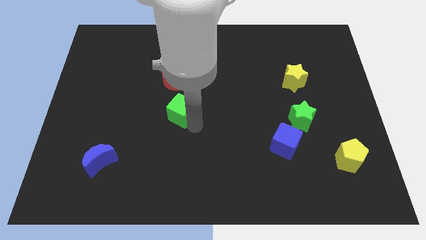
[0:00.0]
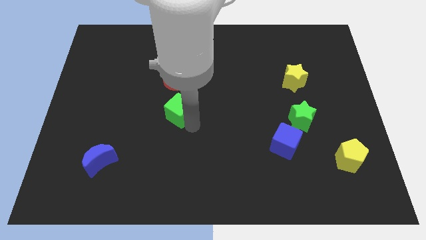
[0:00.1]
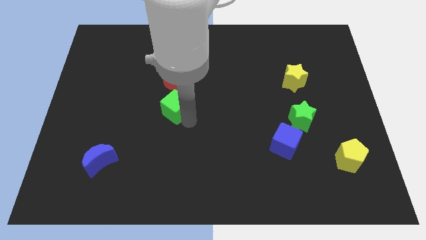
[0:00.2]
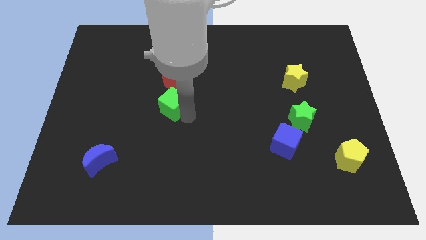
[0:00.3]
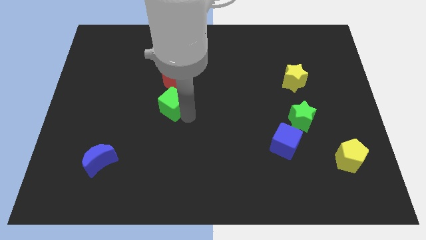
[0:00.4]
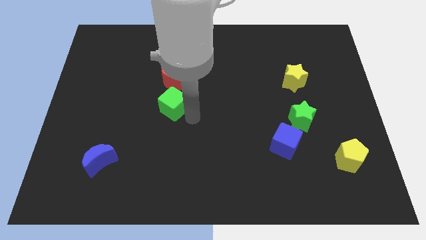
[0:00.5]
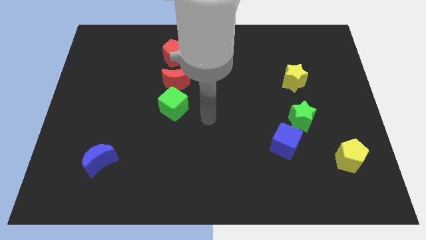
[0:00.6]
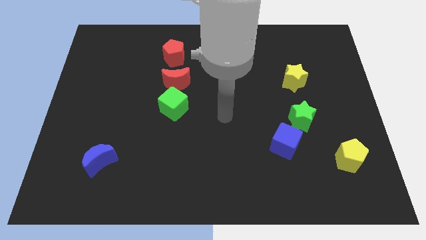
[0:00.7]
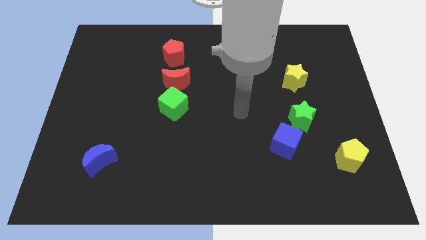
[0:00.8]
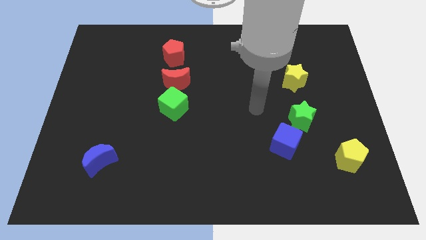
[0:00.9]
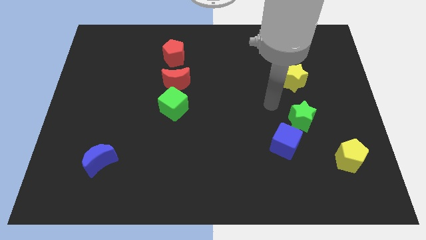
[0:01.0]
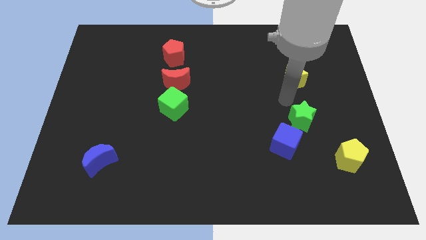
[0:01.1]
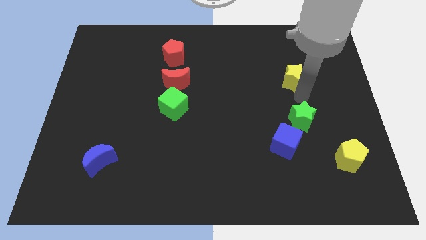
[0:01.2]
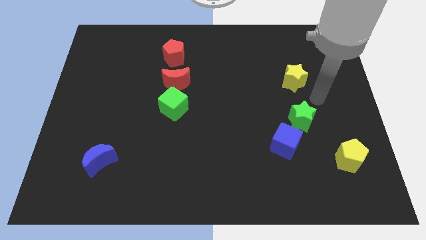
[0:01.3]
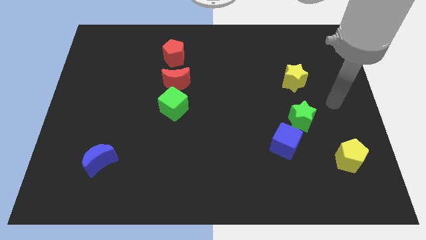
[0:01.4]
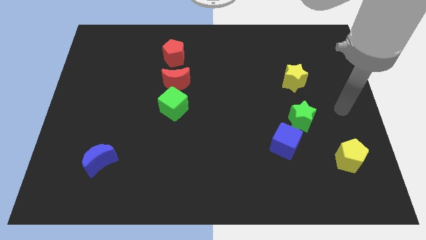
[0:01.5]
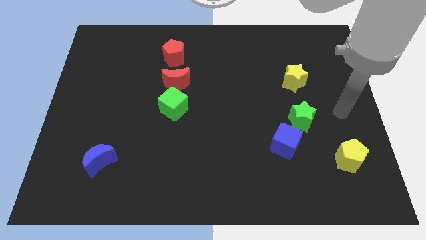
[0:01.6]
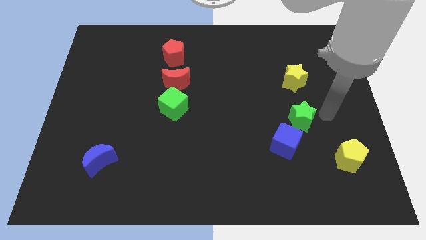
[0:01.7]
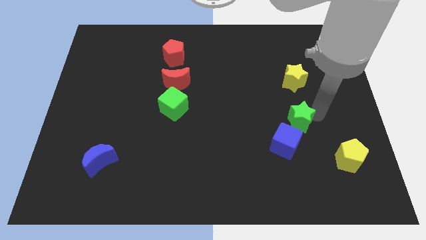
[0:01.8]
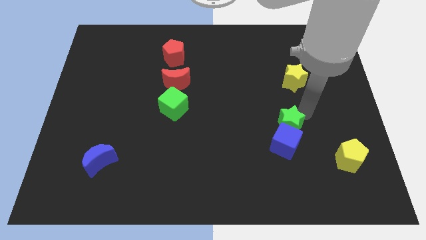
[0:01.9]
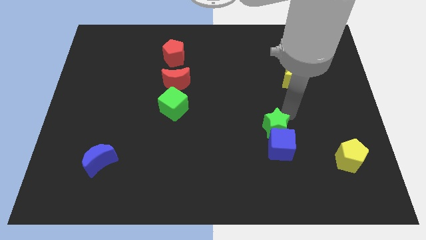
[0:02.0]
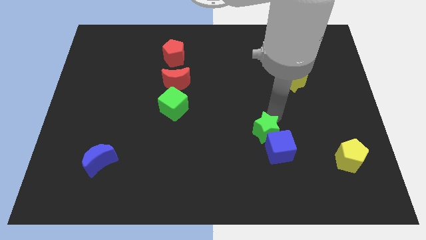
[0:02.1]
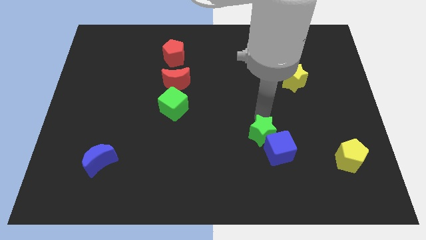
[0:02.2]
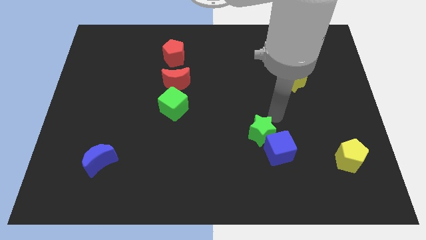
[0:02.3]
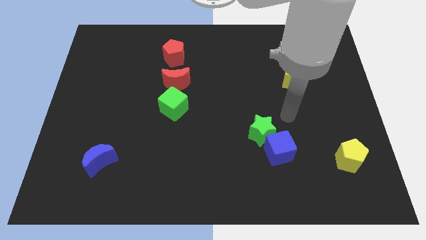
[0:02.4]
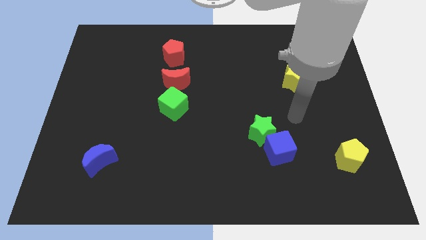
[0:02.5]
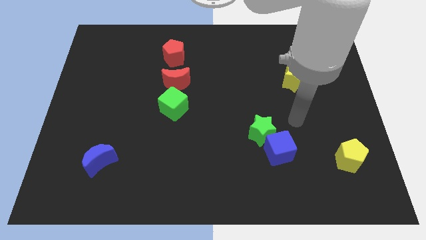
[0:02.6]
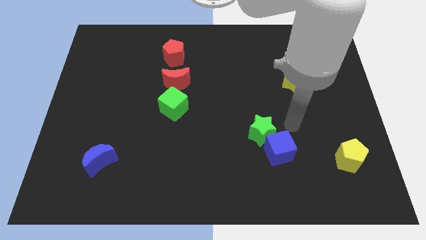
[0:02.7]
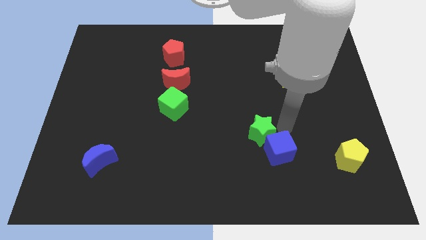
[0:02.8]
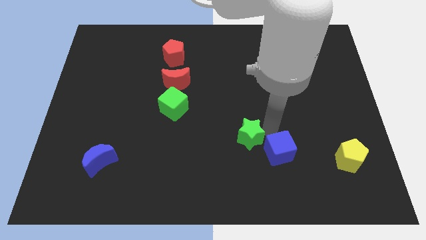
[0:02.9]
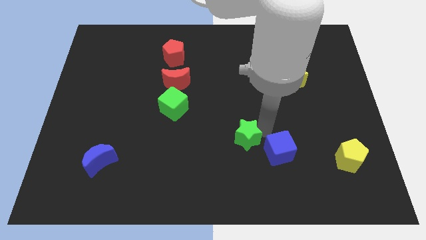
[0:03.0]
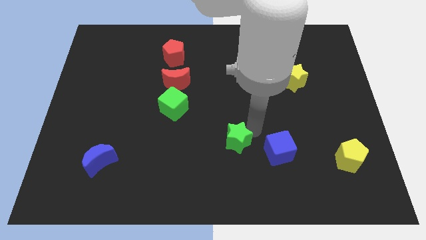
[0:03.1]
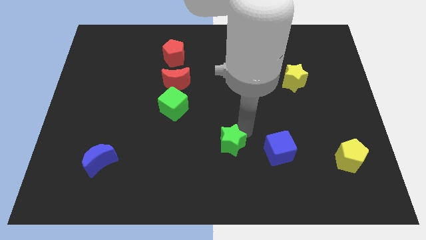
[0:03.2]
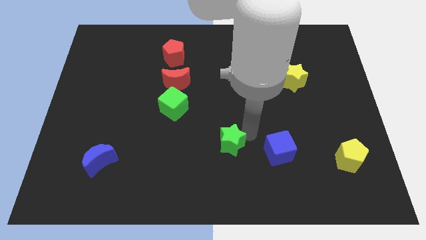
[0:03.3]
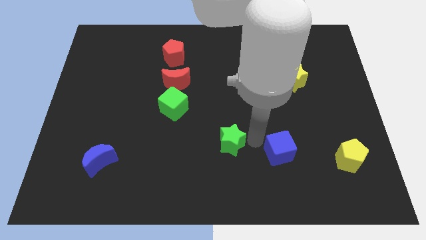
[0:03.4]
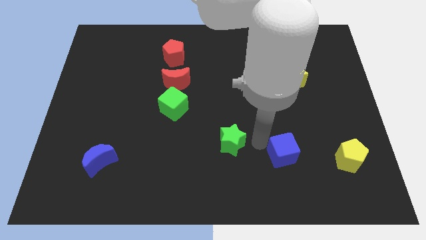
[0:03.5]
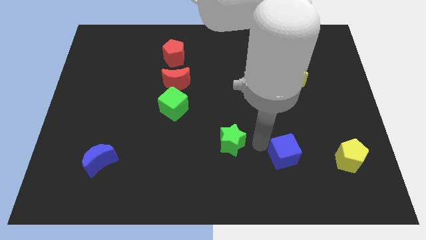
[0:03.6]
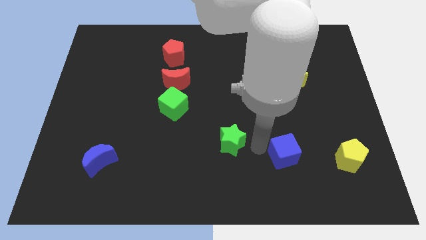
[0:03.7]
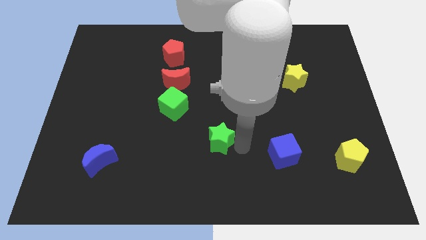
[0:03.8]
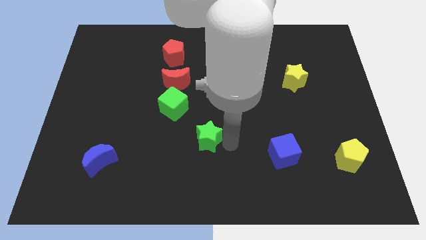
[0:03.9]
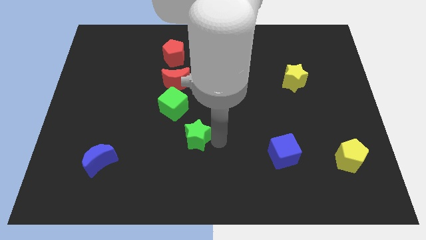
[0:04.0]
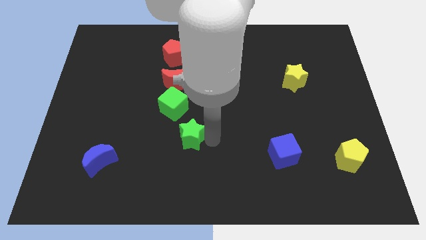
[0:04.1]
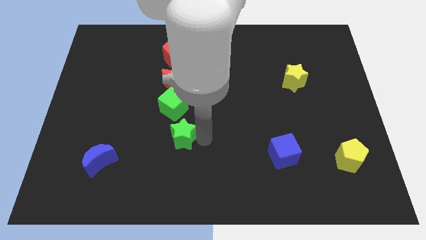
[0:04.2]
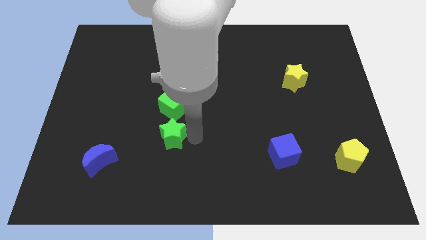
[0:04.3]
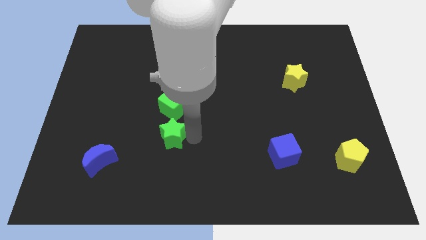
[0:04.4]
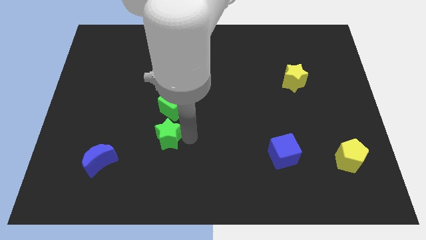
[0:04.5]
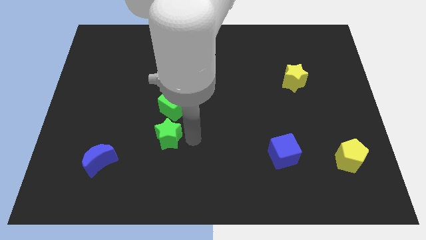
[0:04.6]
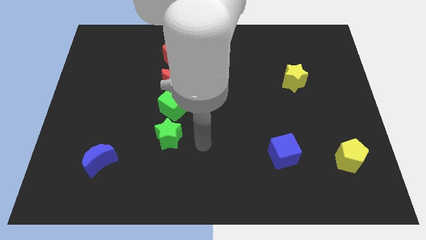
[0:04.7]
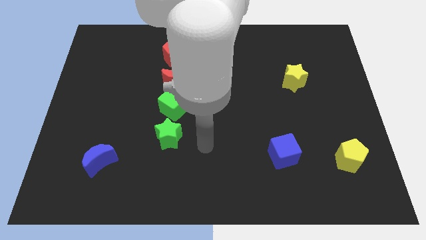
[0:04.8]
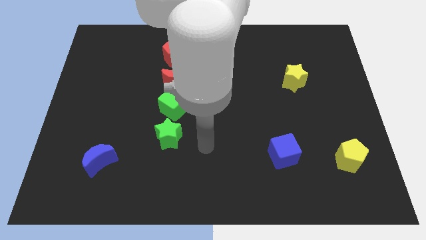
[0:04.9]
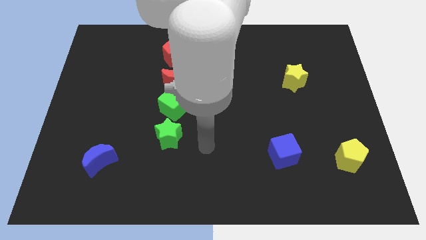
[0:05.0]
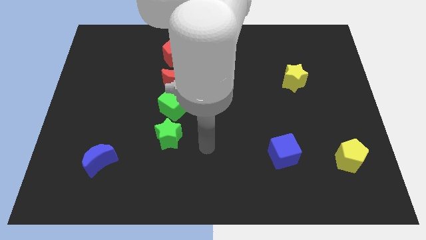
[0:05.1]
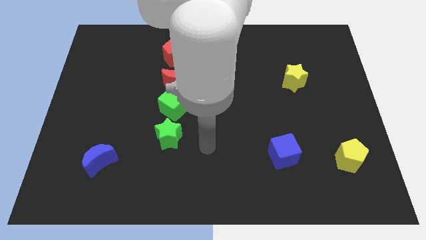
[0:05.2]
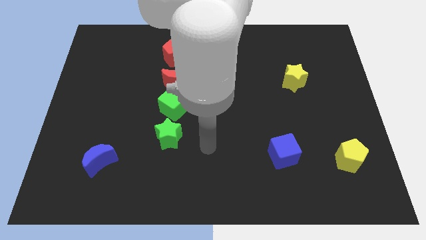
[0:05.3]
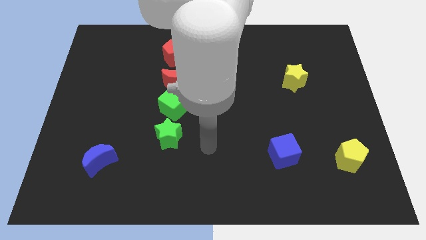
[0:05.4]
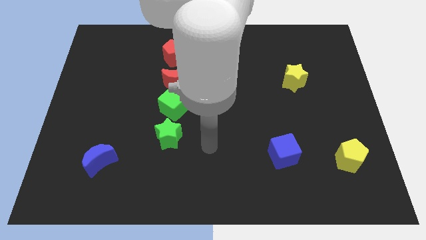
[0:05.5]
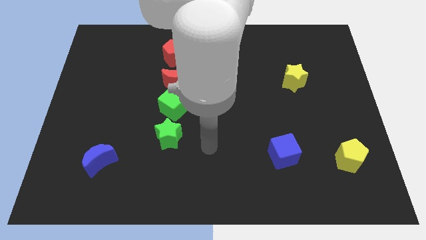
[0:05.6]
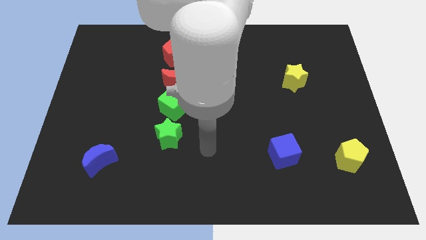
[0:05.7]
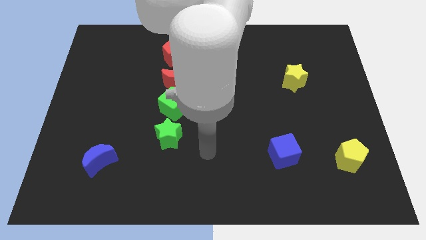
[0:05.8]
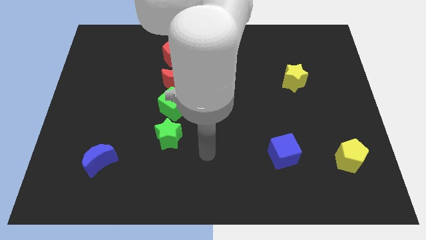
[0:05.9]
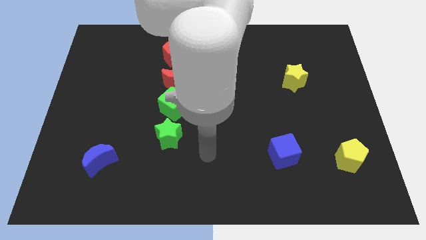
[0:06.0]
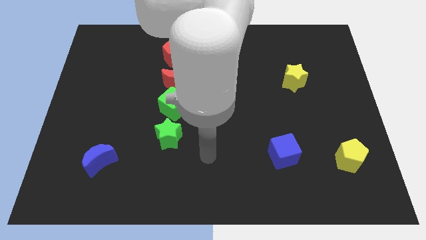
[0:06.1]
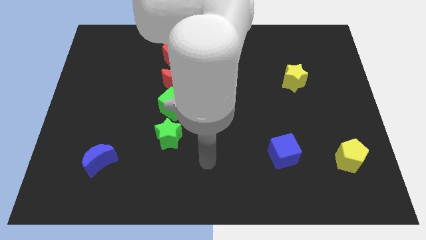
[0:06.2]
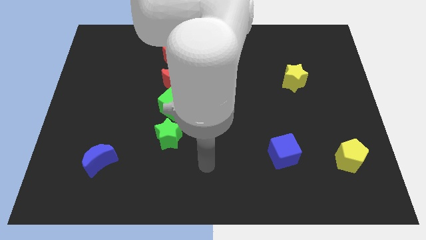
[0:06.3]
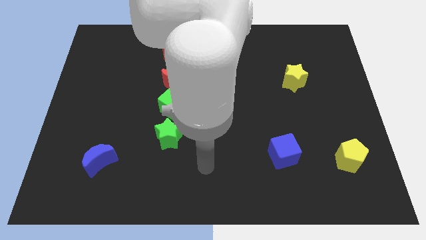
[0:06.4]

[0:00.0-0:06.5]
place the green star below the green cube

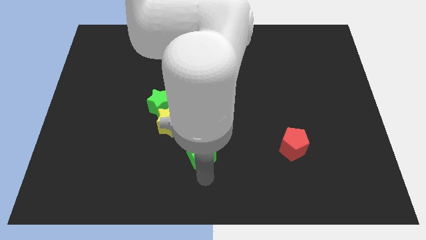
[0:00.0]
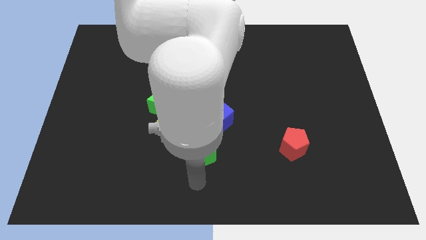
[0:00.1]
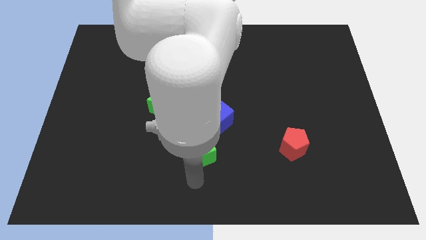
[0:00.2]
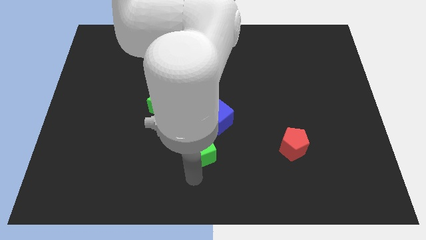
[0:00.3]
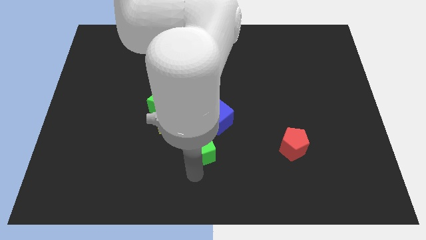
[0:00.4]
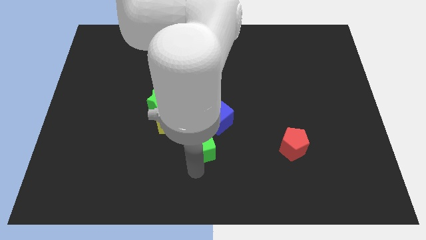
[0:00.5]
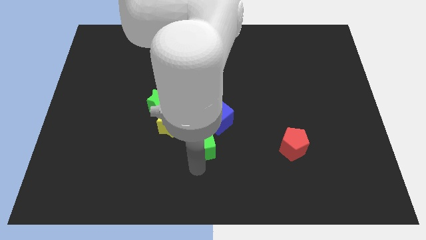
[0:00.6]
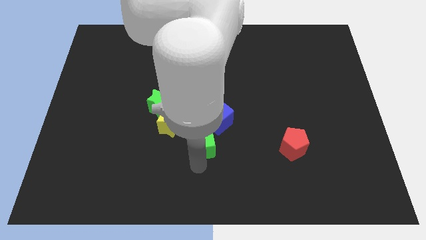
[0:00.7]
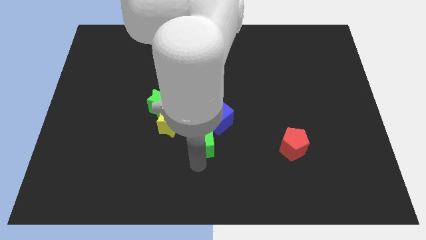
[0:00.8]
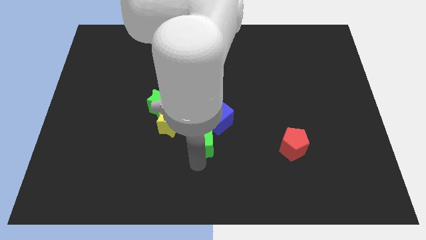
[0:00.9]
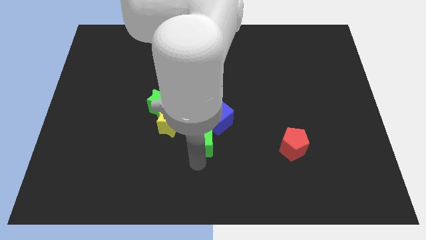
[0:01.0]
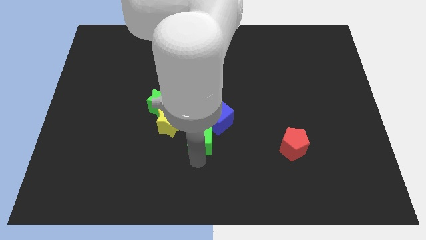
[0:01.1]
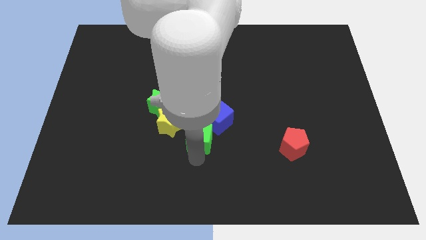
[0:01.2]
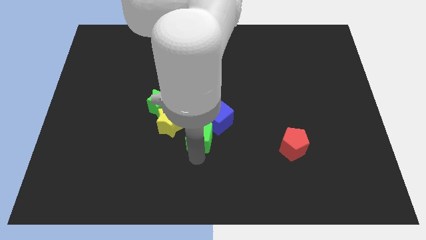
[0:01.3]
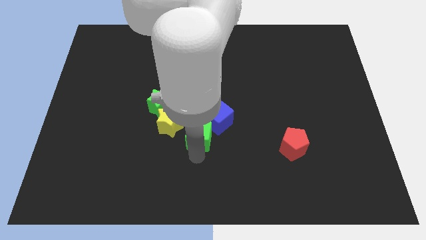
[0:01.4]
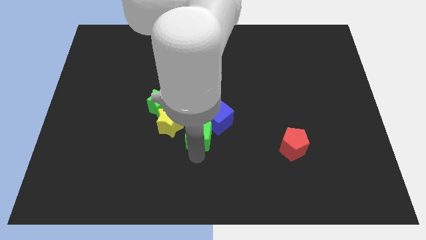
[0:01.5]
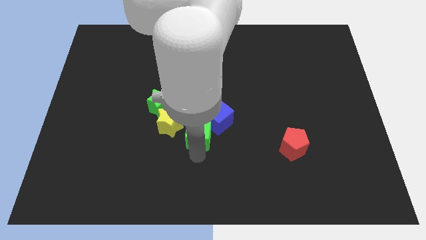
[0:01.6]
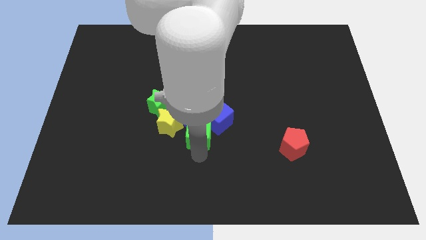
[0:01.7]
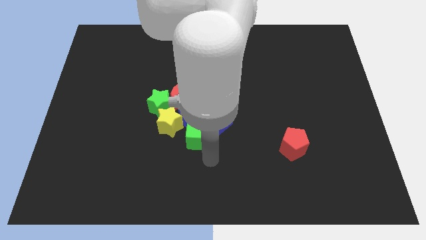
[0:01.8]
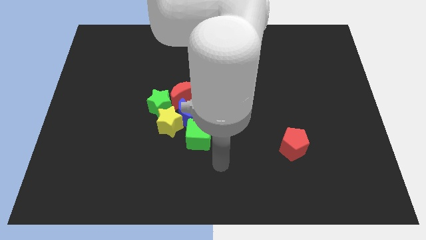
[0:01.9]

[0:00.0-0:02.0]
place the green cube below the blue crescent

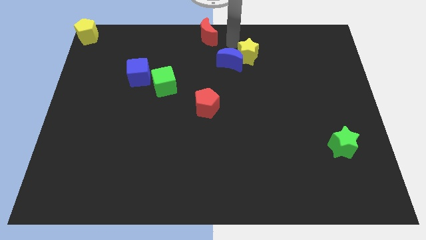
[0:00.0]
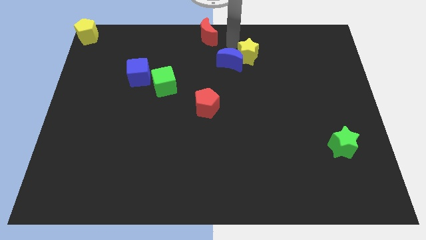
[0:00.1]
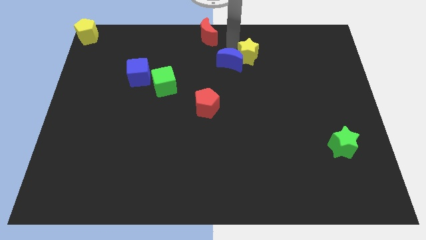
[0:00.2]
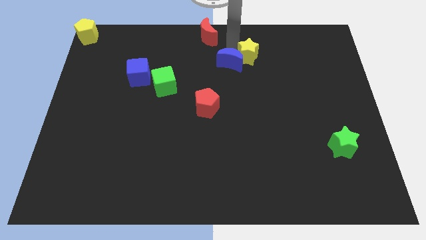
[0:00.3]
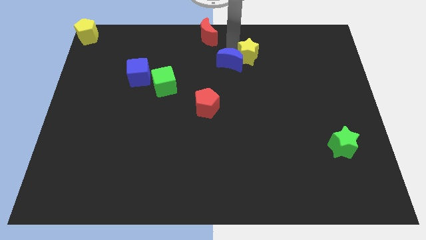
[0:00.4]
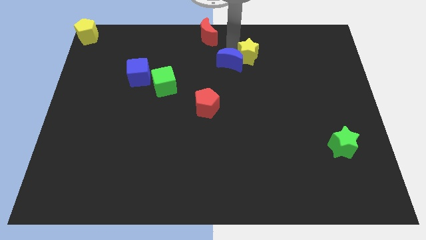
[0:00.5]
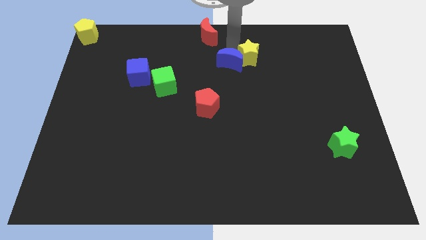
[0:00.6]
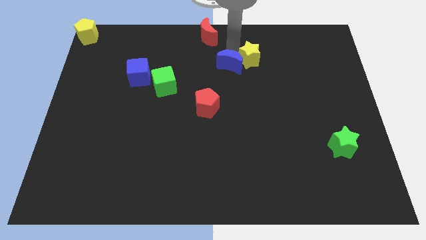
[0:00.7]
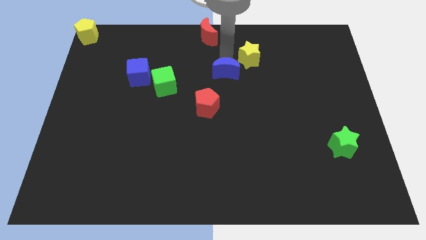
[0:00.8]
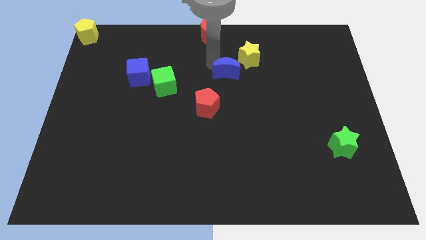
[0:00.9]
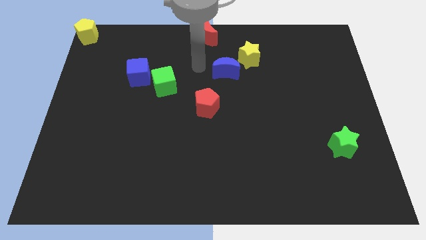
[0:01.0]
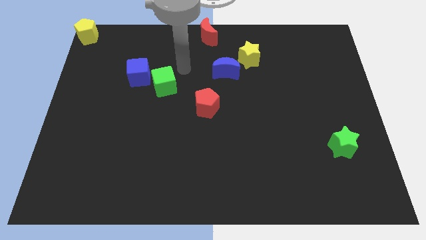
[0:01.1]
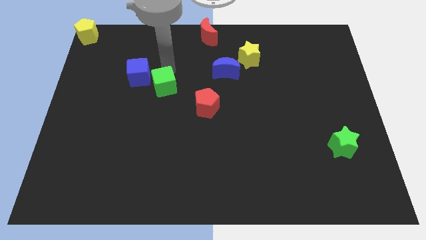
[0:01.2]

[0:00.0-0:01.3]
separate the yellow star and blue crescent
